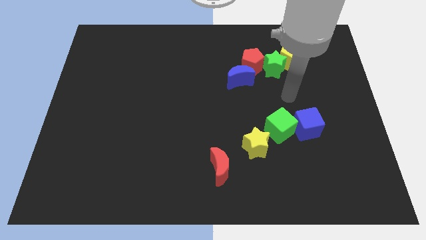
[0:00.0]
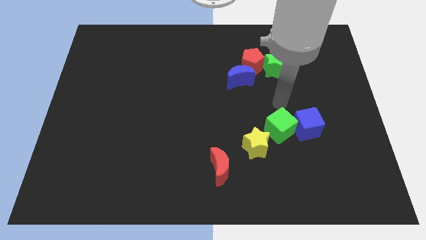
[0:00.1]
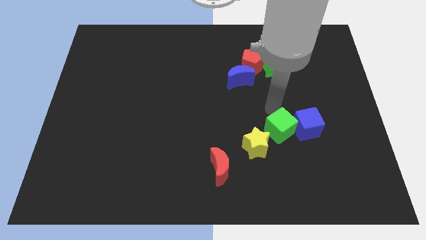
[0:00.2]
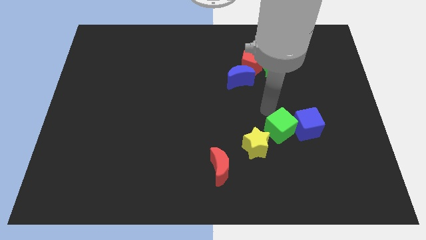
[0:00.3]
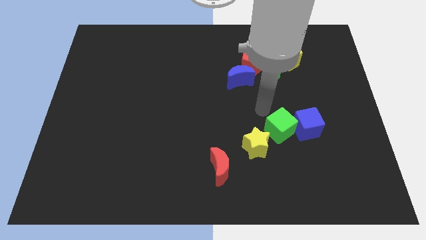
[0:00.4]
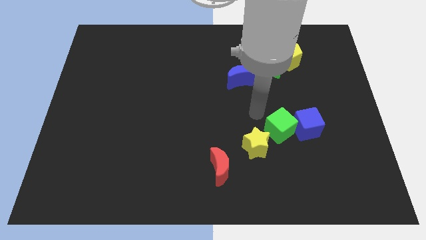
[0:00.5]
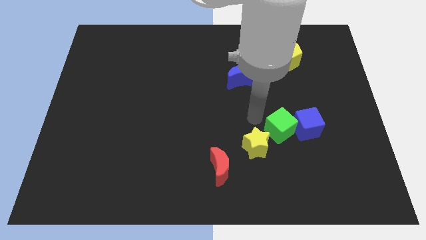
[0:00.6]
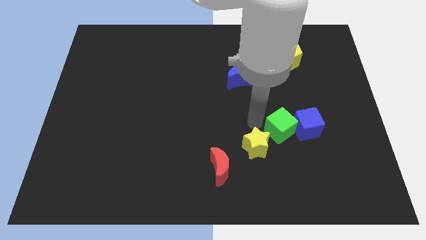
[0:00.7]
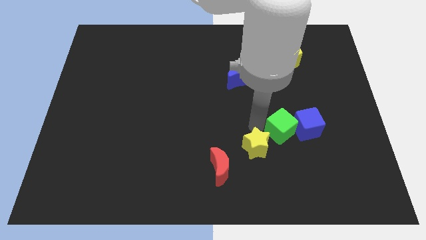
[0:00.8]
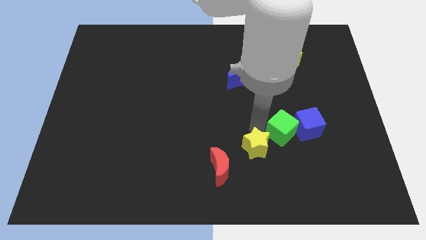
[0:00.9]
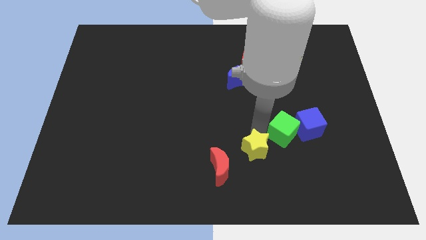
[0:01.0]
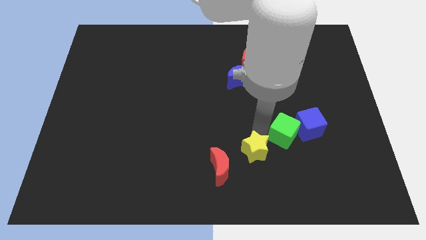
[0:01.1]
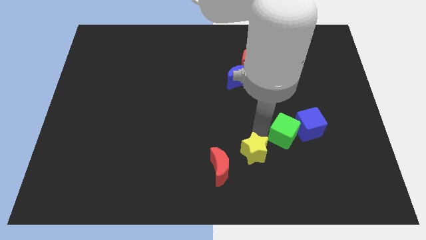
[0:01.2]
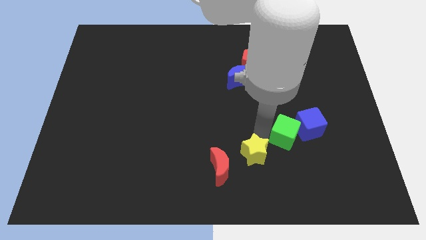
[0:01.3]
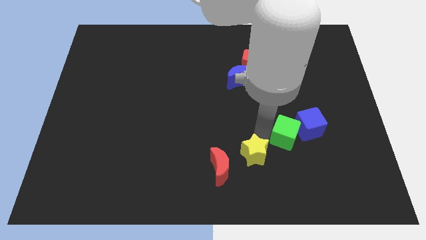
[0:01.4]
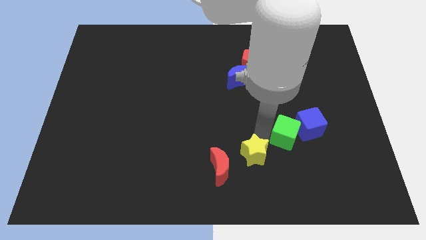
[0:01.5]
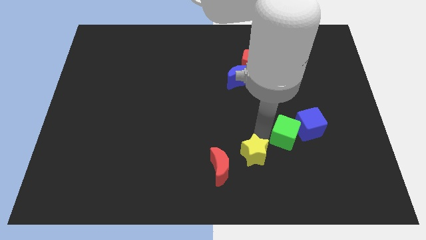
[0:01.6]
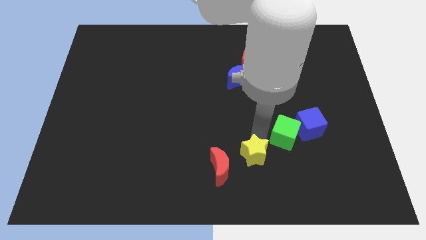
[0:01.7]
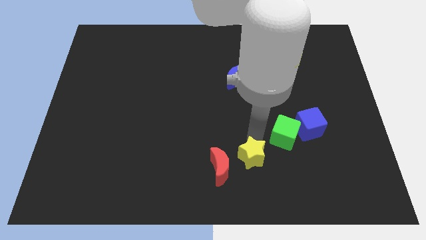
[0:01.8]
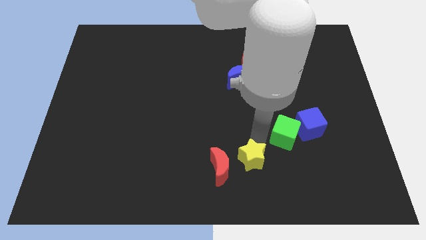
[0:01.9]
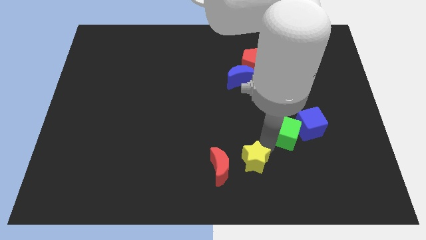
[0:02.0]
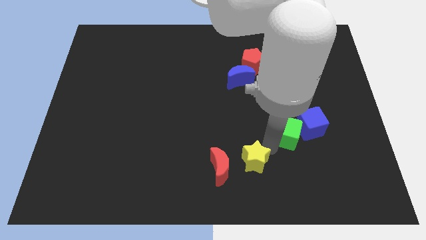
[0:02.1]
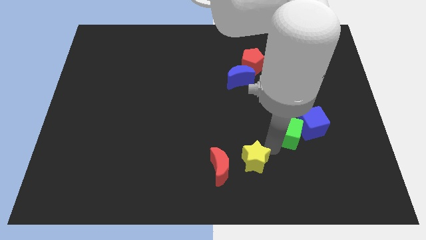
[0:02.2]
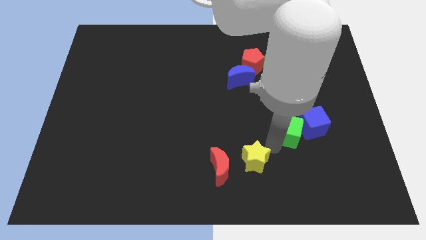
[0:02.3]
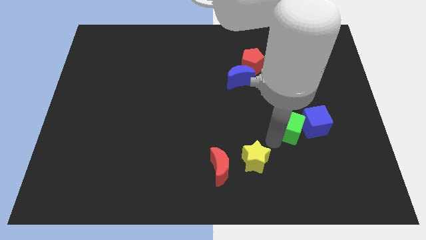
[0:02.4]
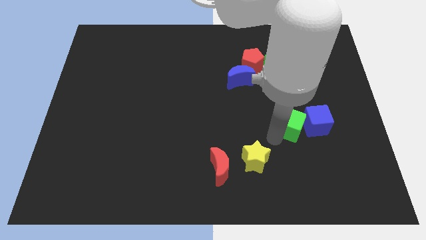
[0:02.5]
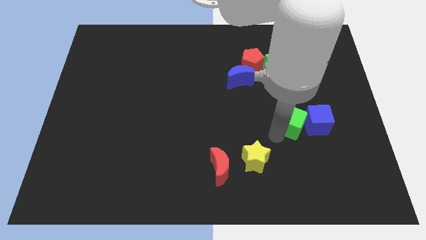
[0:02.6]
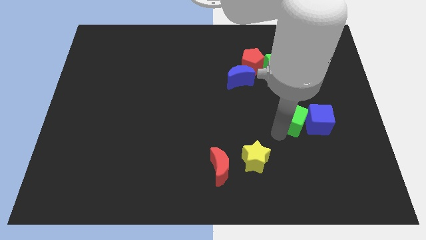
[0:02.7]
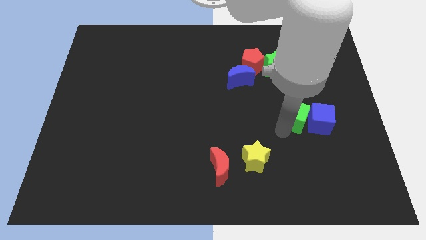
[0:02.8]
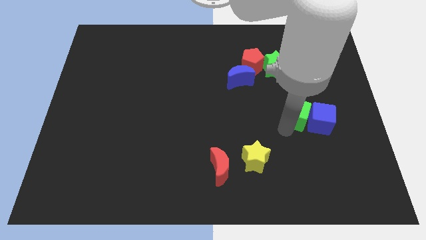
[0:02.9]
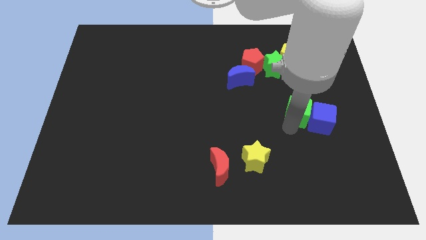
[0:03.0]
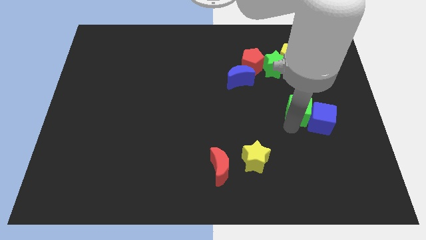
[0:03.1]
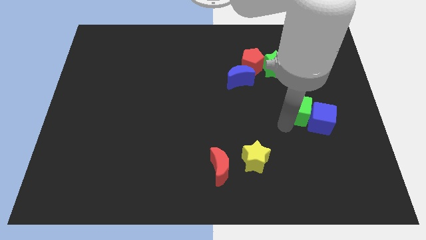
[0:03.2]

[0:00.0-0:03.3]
push the green cube and blue cube to the right side of the table

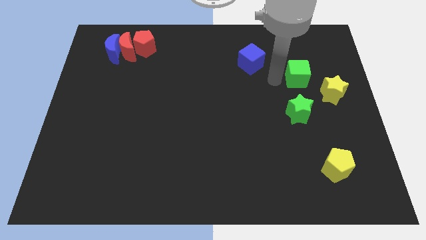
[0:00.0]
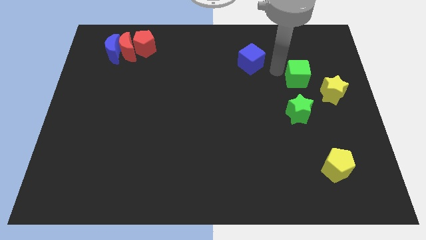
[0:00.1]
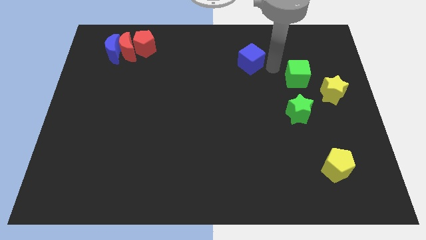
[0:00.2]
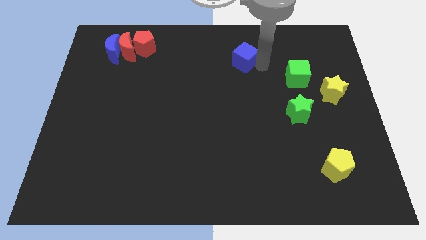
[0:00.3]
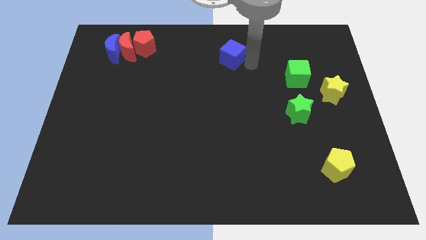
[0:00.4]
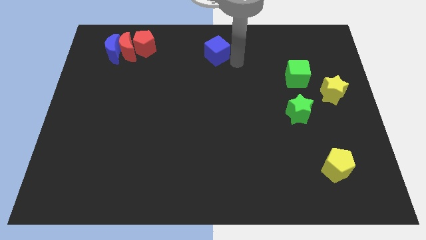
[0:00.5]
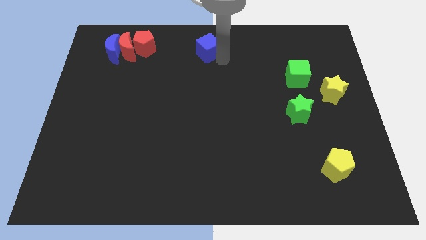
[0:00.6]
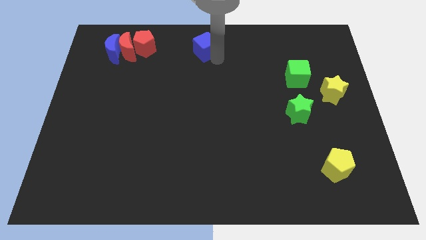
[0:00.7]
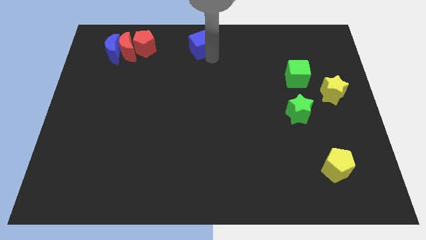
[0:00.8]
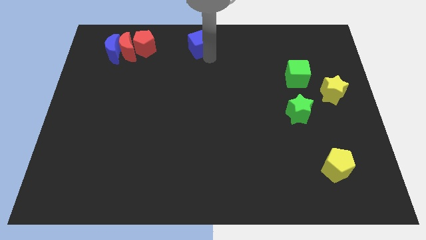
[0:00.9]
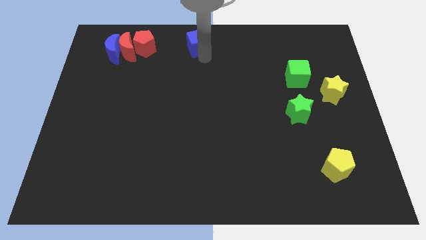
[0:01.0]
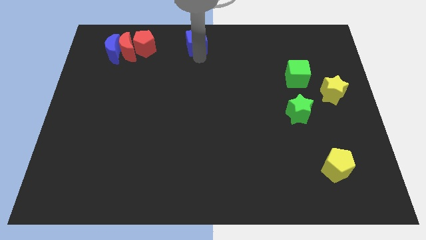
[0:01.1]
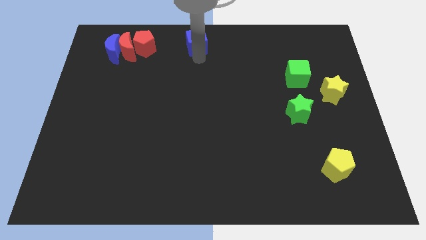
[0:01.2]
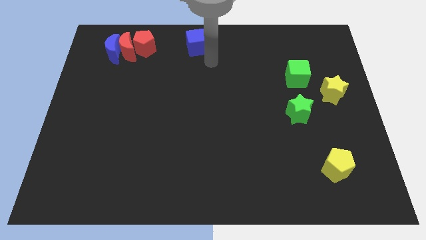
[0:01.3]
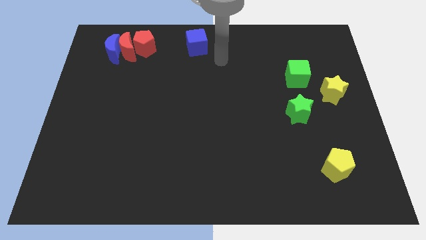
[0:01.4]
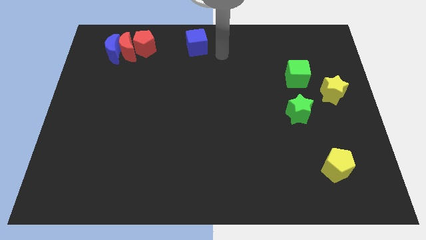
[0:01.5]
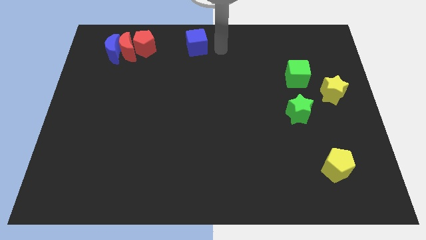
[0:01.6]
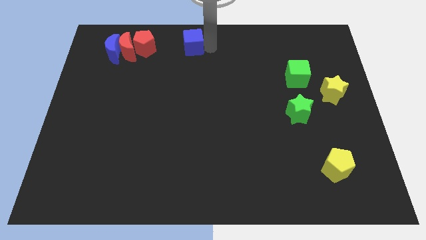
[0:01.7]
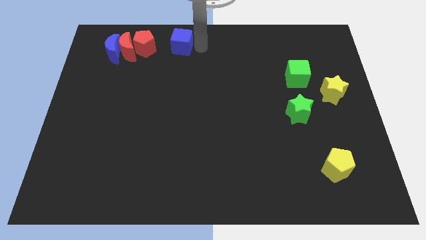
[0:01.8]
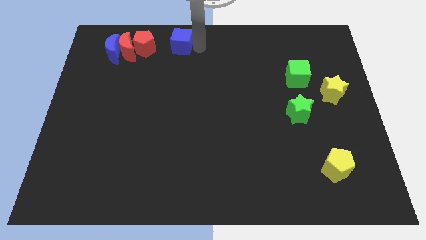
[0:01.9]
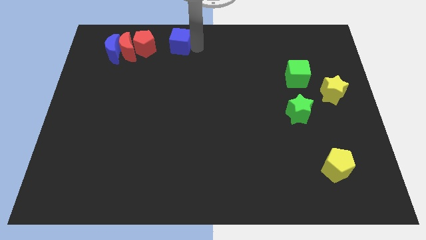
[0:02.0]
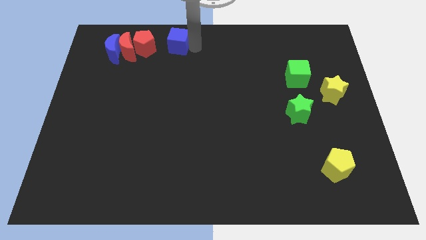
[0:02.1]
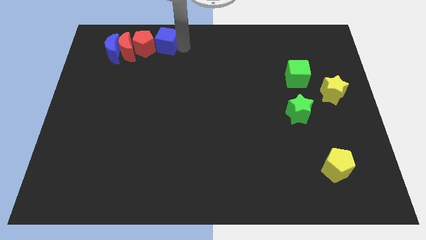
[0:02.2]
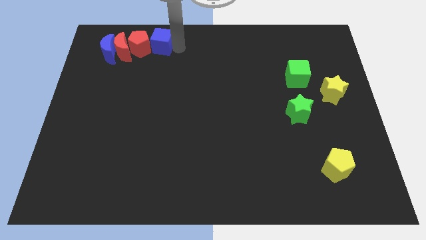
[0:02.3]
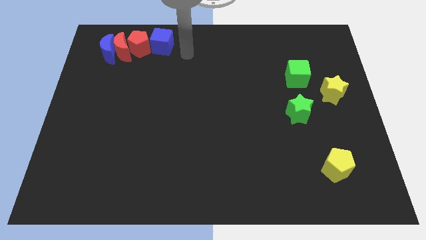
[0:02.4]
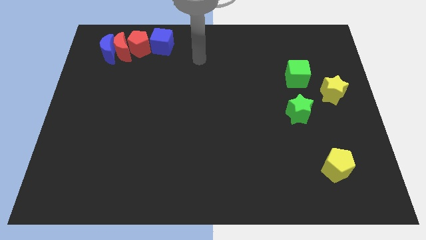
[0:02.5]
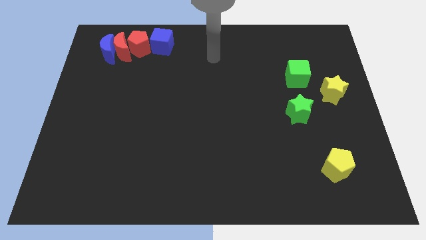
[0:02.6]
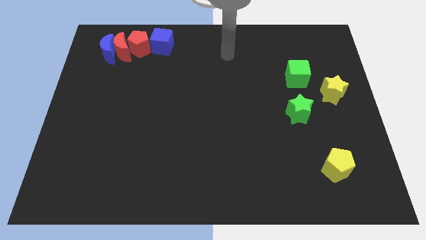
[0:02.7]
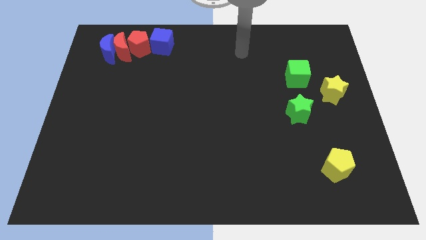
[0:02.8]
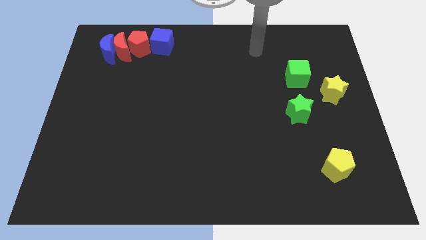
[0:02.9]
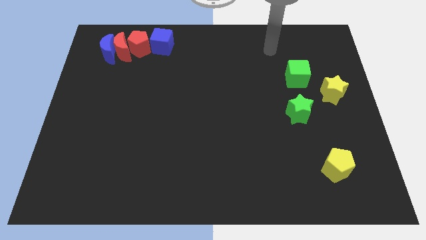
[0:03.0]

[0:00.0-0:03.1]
slide blue cube to the right of red pentagon

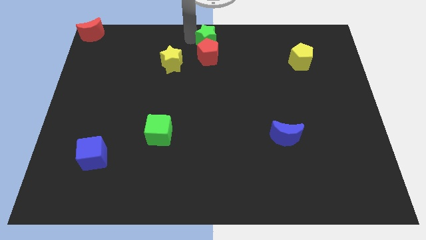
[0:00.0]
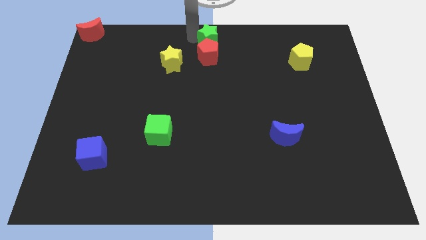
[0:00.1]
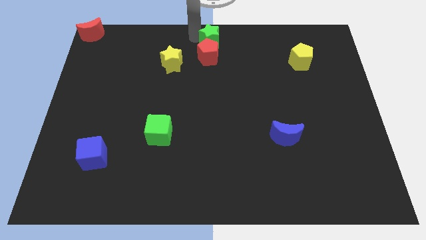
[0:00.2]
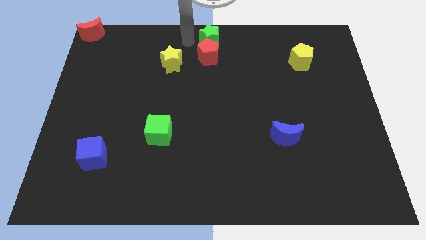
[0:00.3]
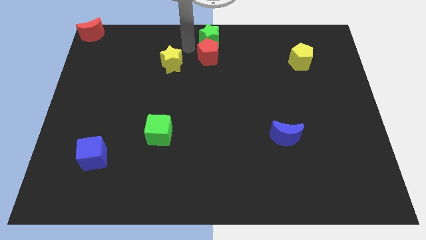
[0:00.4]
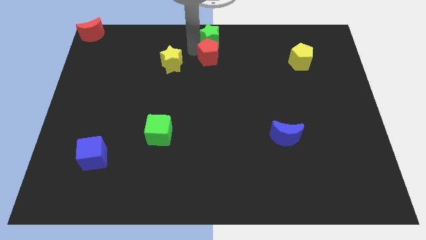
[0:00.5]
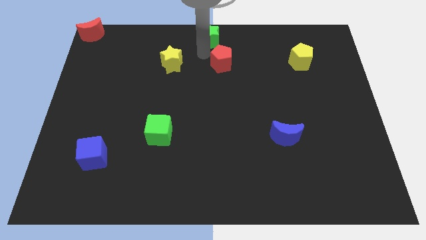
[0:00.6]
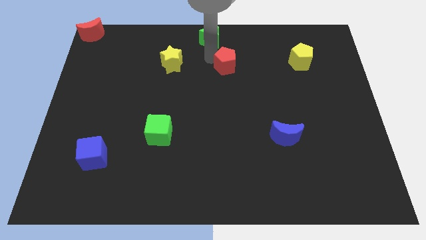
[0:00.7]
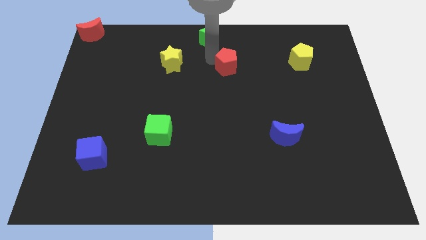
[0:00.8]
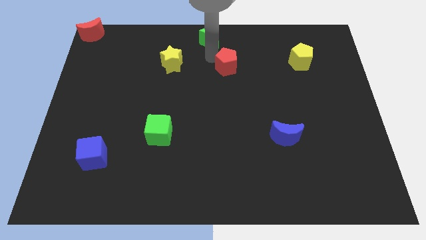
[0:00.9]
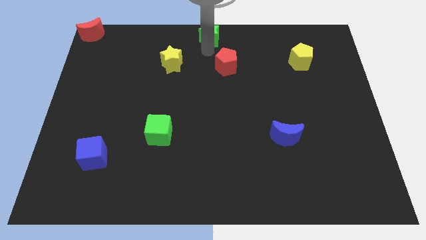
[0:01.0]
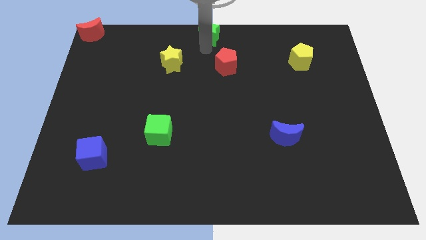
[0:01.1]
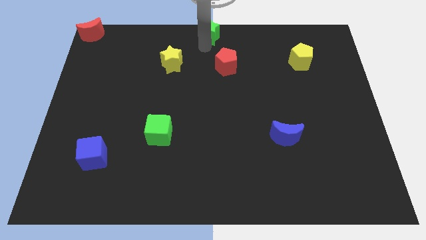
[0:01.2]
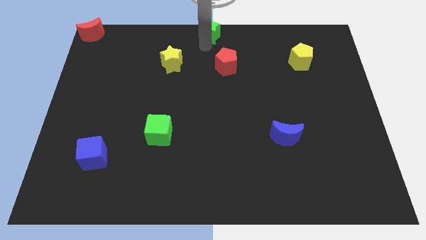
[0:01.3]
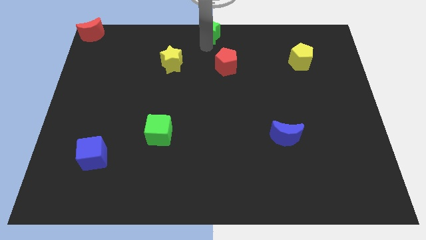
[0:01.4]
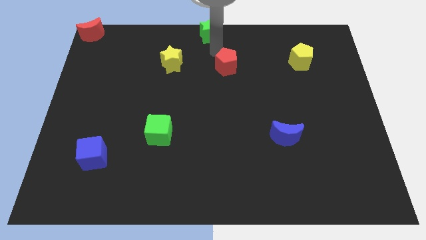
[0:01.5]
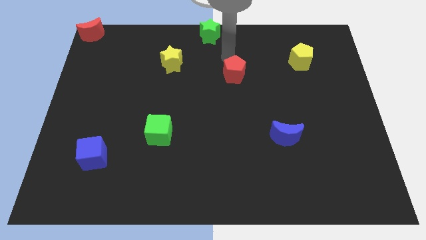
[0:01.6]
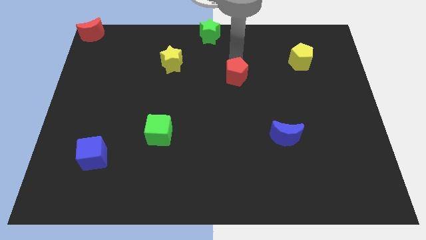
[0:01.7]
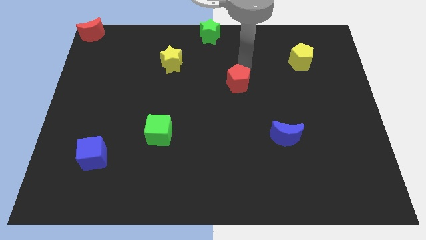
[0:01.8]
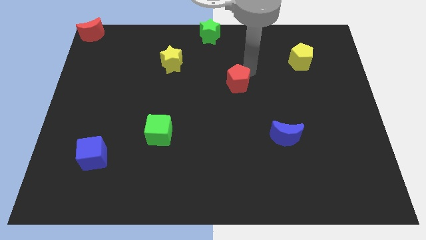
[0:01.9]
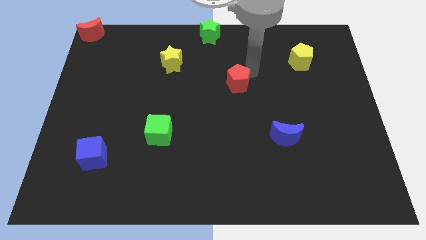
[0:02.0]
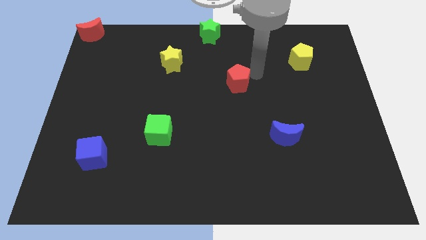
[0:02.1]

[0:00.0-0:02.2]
separate the green star and the red pentagon

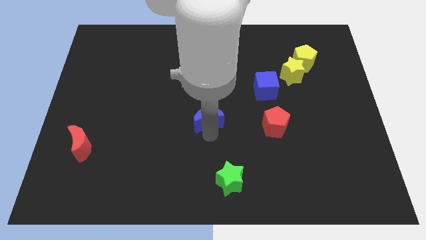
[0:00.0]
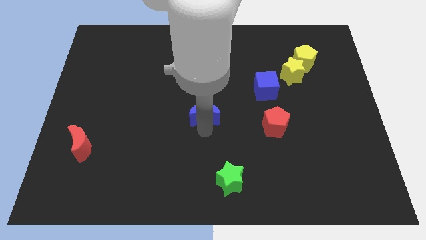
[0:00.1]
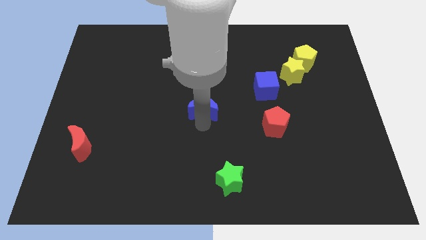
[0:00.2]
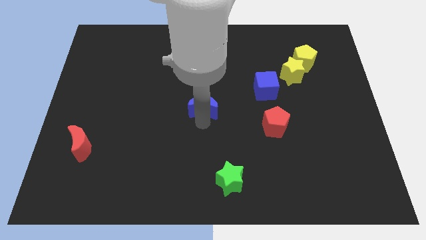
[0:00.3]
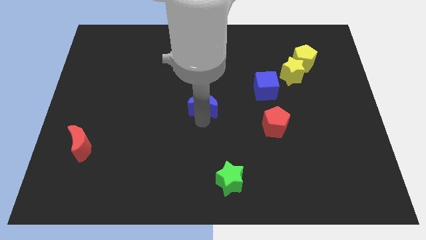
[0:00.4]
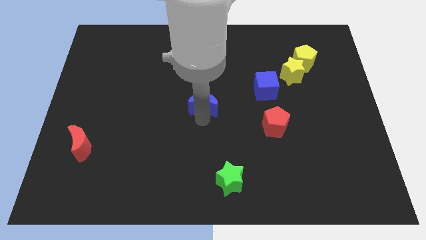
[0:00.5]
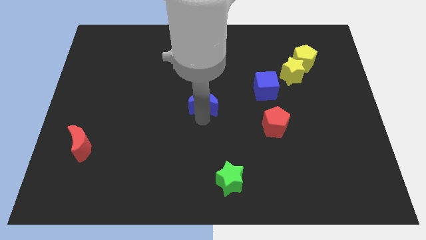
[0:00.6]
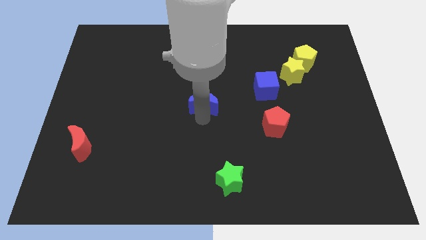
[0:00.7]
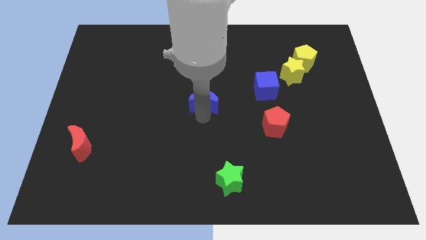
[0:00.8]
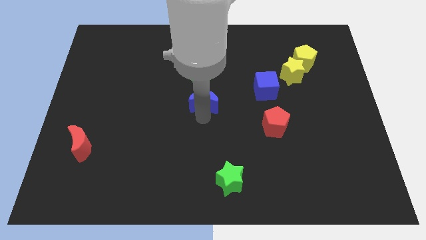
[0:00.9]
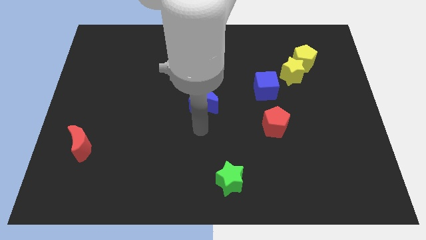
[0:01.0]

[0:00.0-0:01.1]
move blue moon to the center
